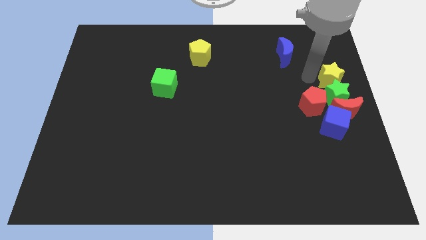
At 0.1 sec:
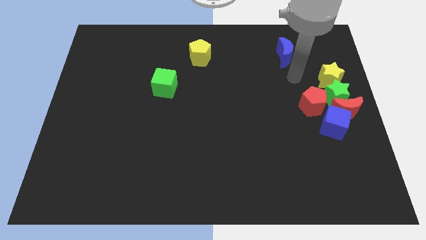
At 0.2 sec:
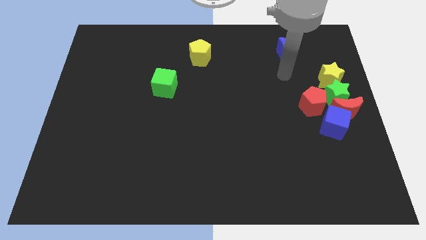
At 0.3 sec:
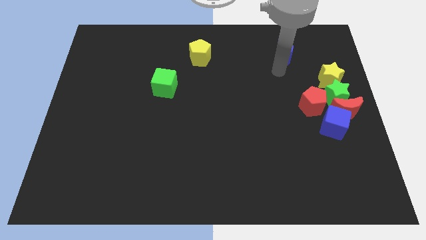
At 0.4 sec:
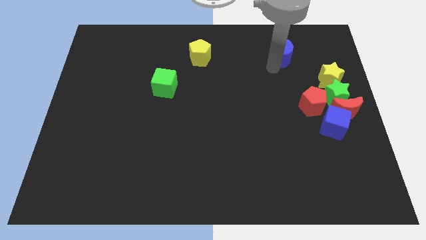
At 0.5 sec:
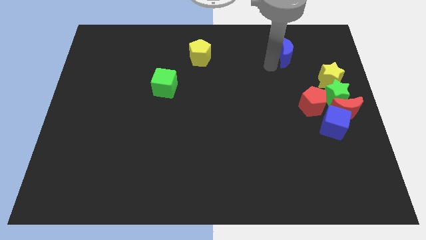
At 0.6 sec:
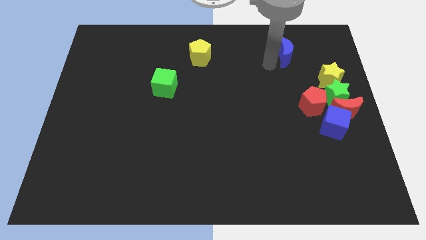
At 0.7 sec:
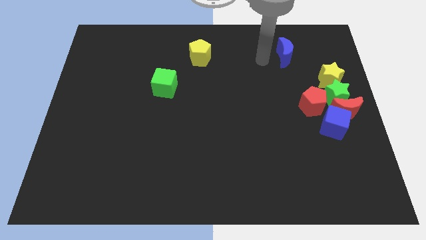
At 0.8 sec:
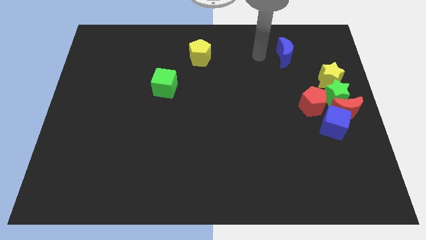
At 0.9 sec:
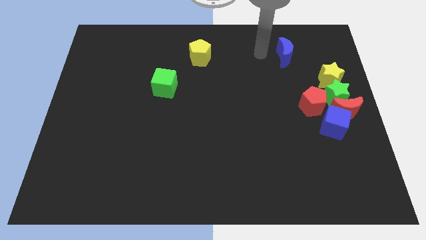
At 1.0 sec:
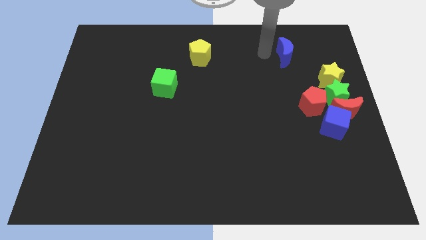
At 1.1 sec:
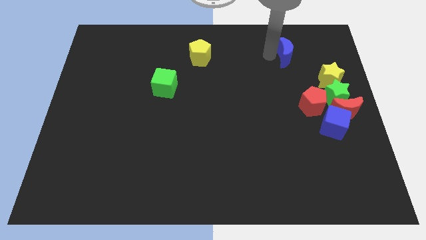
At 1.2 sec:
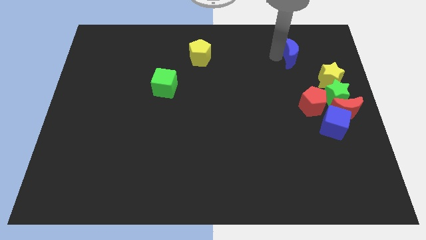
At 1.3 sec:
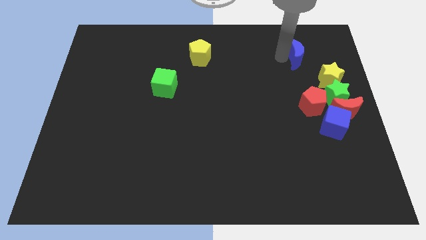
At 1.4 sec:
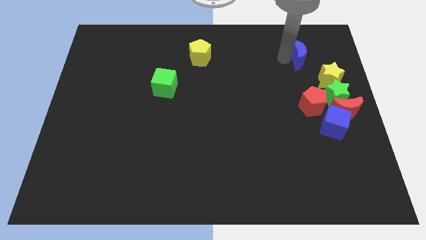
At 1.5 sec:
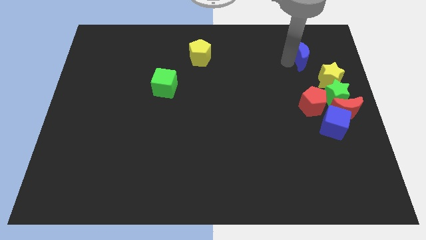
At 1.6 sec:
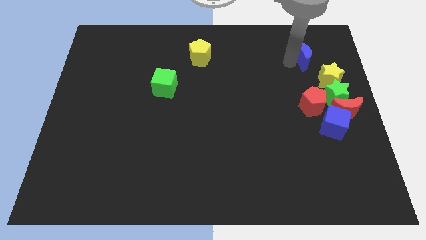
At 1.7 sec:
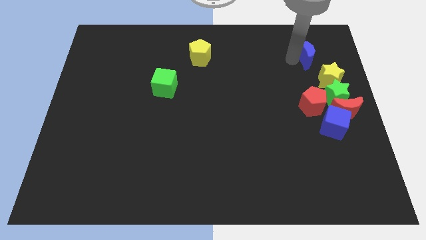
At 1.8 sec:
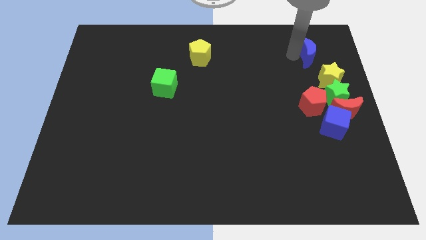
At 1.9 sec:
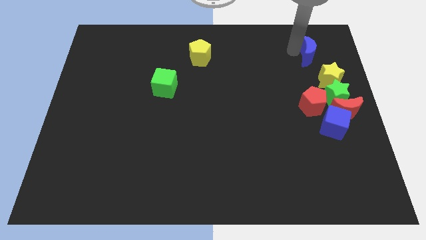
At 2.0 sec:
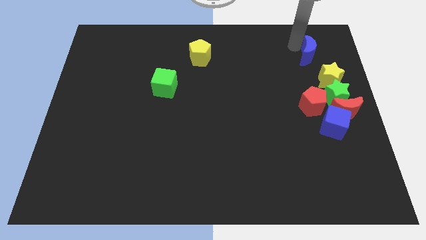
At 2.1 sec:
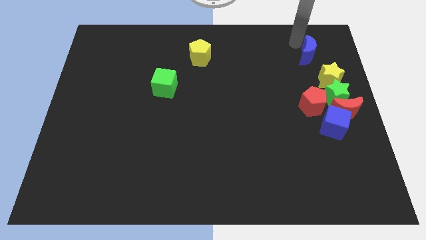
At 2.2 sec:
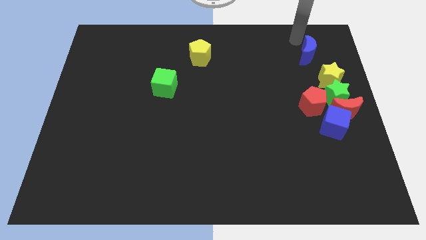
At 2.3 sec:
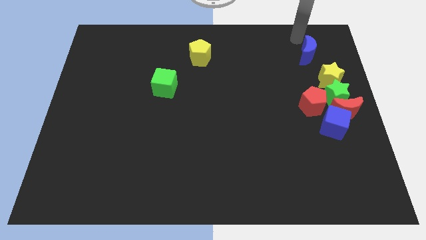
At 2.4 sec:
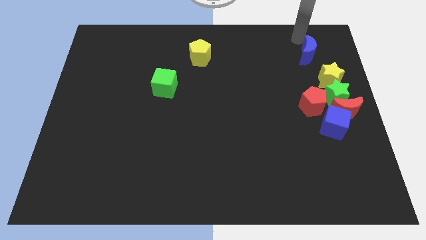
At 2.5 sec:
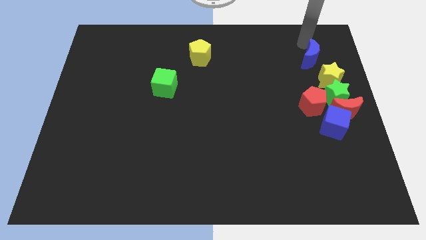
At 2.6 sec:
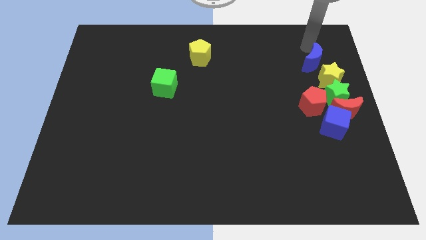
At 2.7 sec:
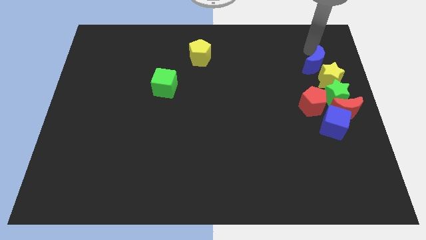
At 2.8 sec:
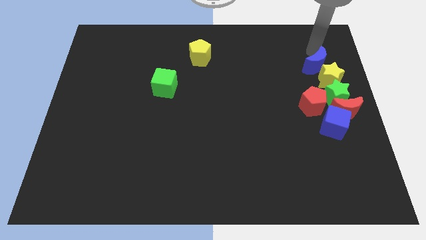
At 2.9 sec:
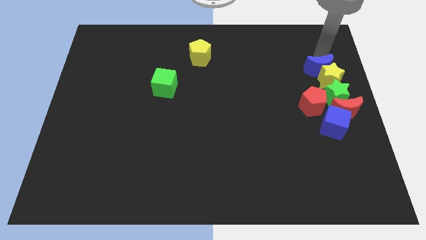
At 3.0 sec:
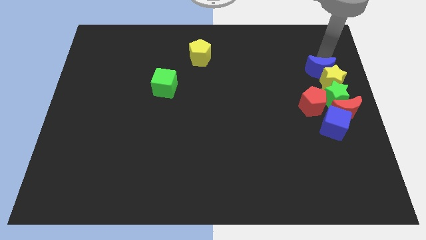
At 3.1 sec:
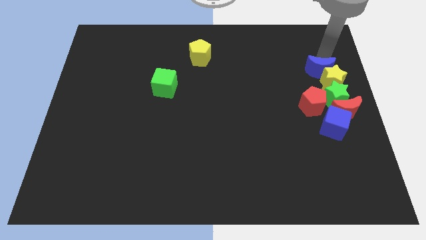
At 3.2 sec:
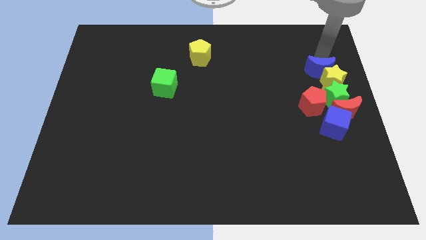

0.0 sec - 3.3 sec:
move the blue crescent into the yellow star

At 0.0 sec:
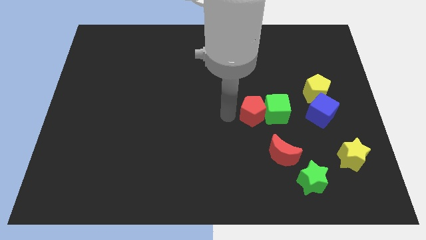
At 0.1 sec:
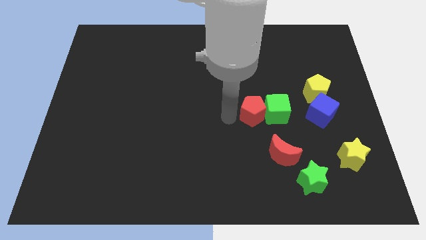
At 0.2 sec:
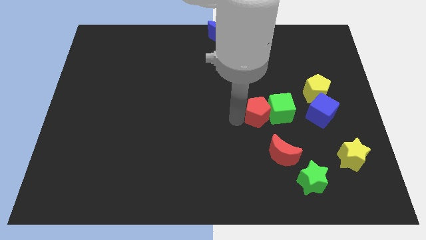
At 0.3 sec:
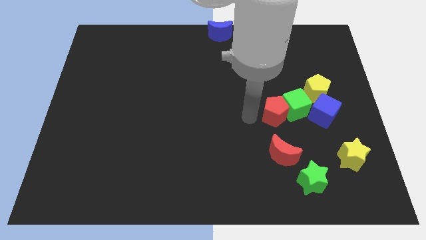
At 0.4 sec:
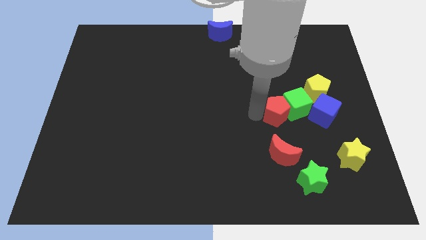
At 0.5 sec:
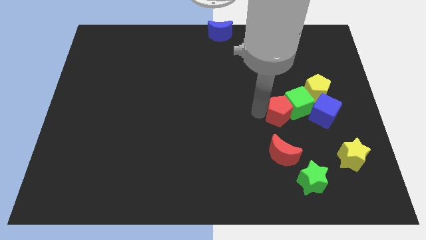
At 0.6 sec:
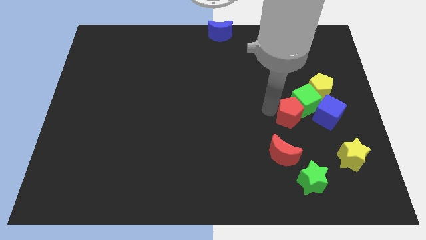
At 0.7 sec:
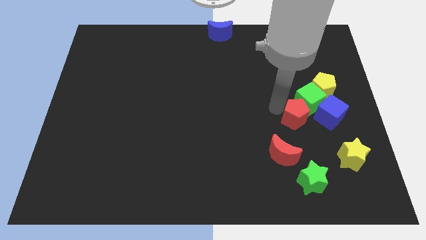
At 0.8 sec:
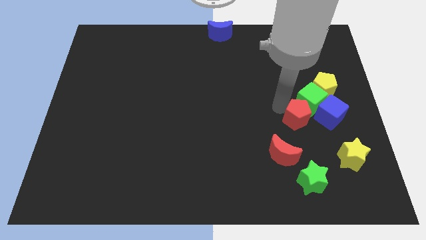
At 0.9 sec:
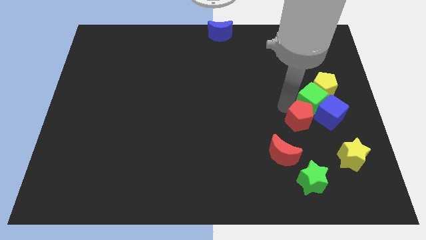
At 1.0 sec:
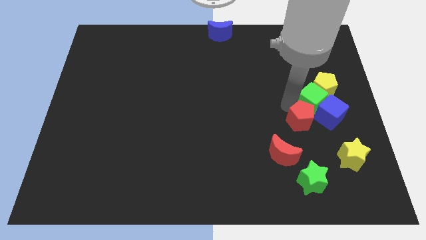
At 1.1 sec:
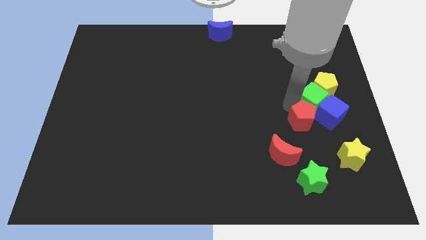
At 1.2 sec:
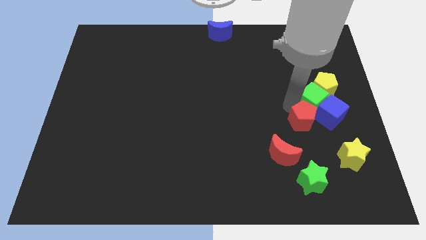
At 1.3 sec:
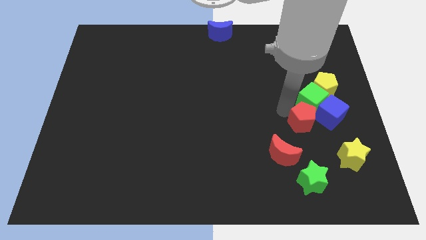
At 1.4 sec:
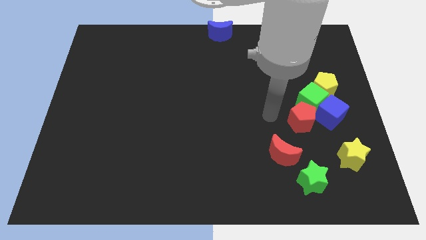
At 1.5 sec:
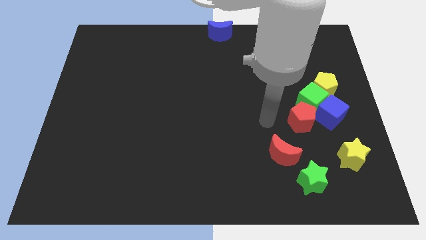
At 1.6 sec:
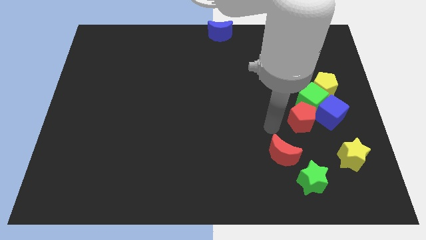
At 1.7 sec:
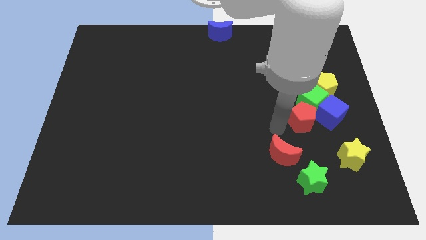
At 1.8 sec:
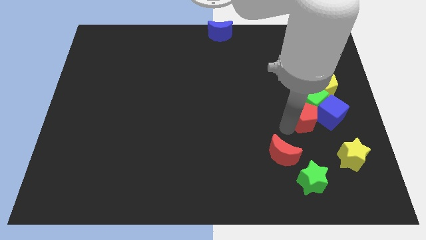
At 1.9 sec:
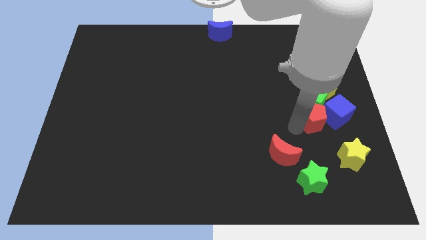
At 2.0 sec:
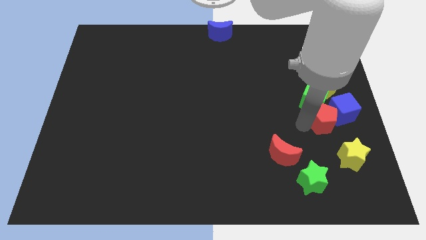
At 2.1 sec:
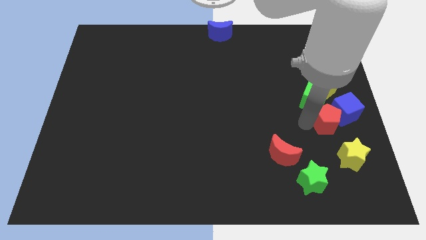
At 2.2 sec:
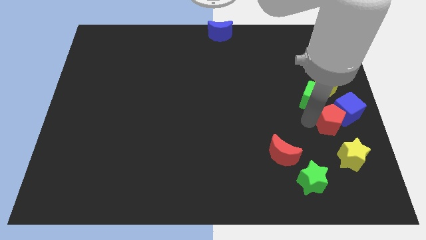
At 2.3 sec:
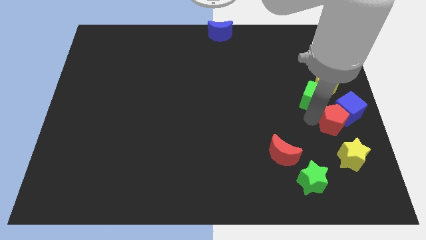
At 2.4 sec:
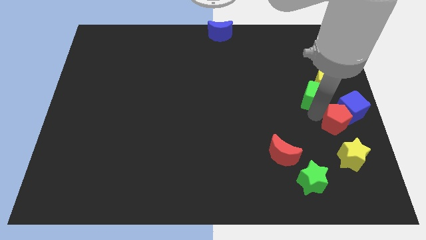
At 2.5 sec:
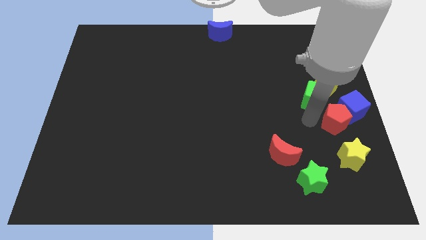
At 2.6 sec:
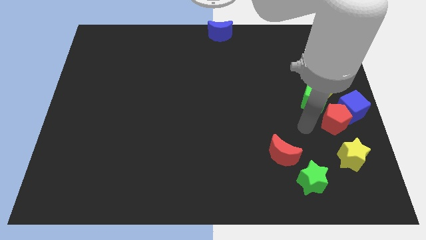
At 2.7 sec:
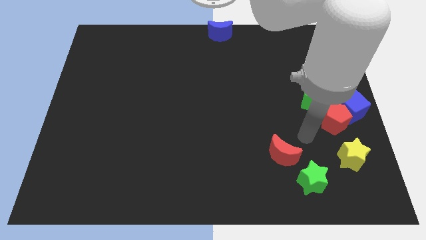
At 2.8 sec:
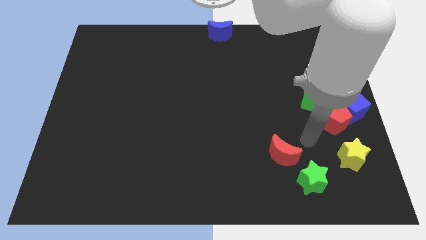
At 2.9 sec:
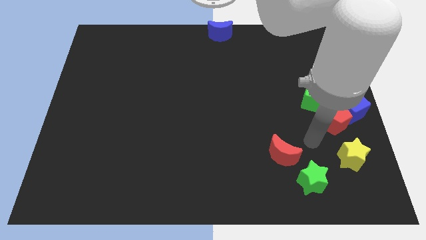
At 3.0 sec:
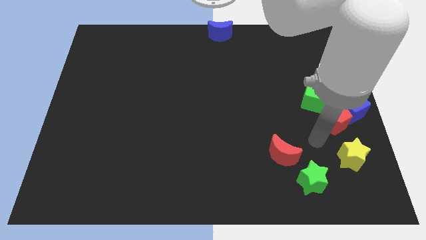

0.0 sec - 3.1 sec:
push group of blocks towards center right

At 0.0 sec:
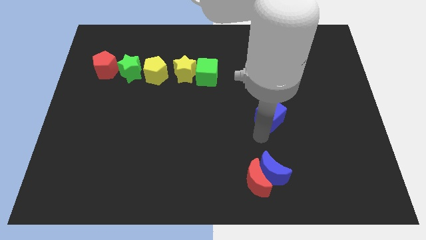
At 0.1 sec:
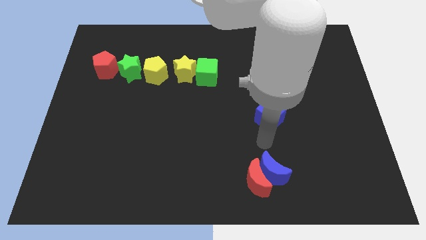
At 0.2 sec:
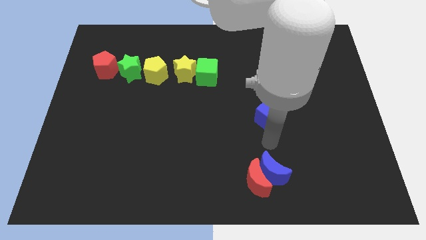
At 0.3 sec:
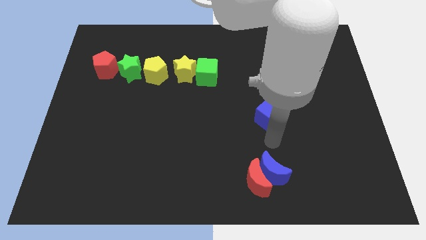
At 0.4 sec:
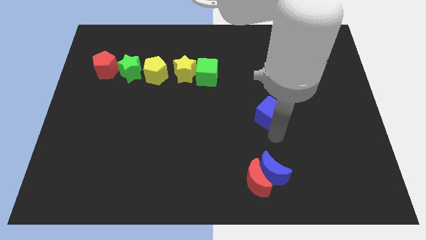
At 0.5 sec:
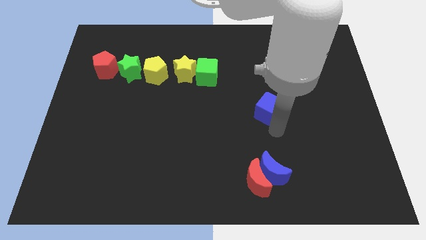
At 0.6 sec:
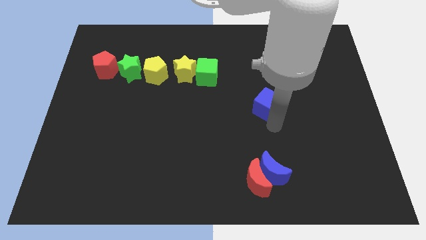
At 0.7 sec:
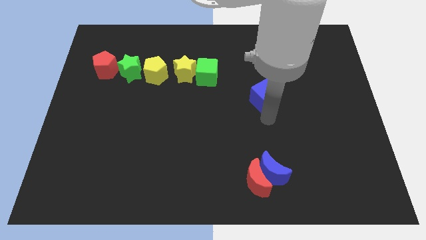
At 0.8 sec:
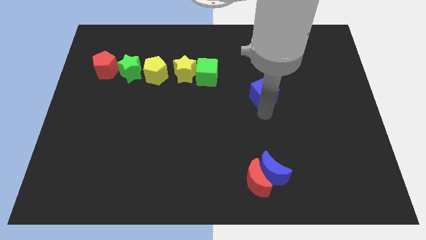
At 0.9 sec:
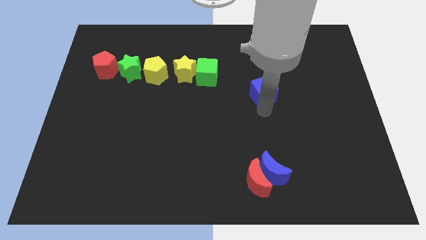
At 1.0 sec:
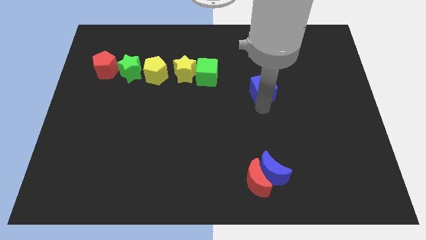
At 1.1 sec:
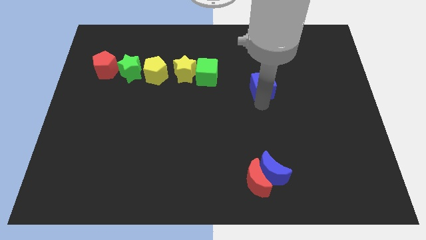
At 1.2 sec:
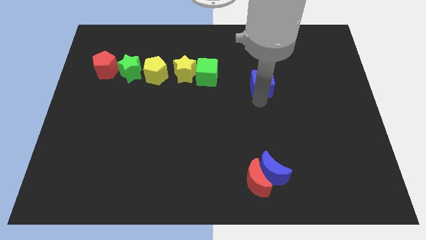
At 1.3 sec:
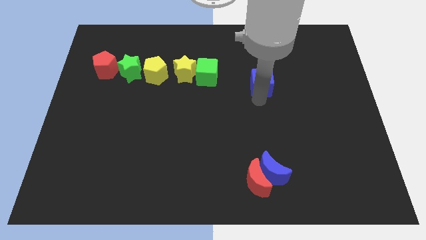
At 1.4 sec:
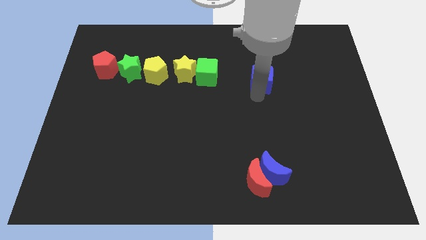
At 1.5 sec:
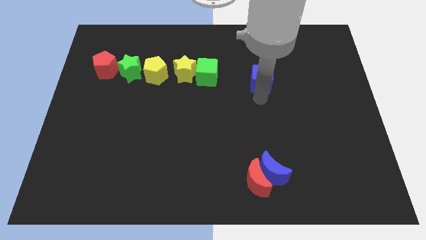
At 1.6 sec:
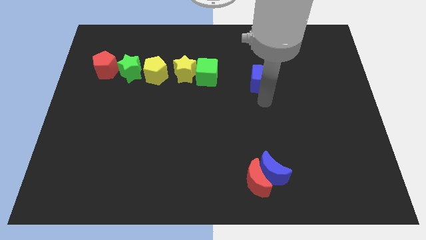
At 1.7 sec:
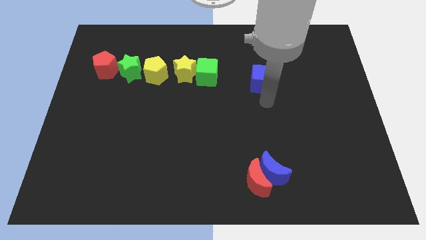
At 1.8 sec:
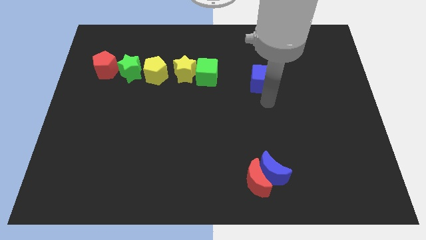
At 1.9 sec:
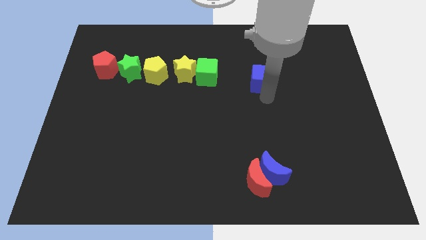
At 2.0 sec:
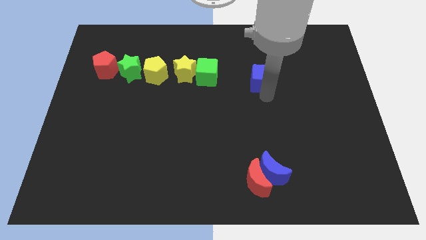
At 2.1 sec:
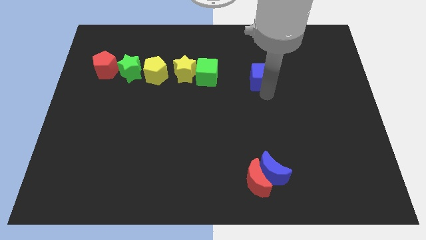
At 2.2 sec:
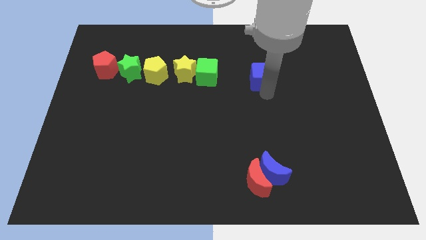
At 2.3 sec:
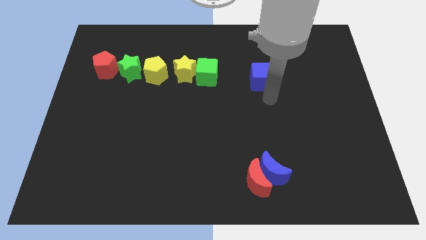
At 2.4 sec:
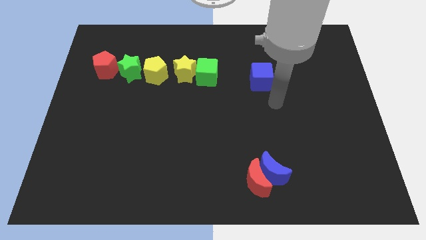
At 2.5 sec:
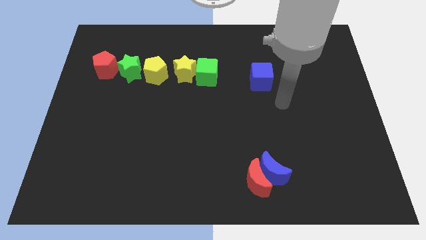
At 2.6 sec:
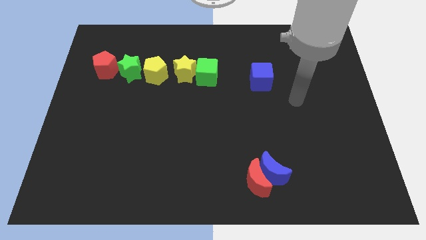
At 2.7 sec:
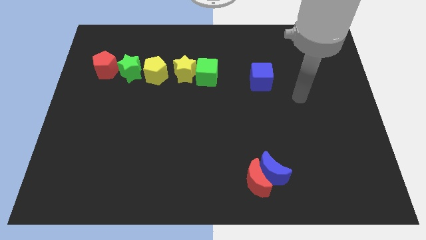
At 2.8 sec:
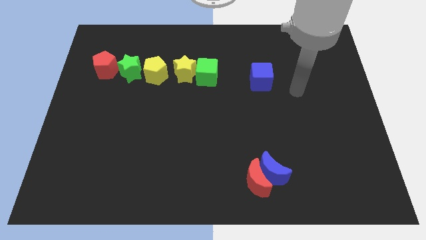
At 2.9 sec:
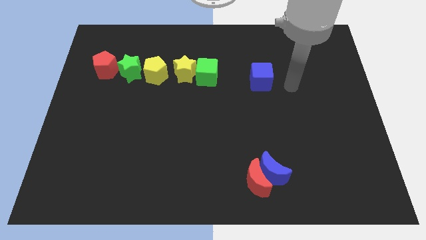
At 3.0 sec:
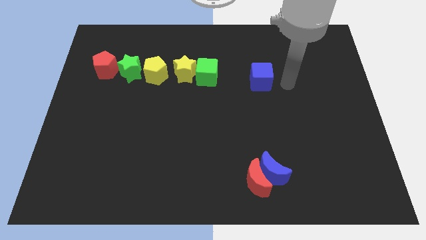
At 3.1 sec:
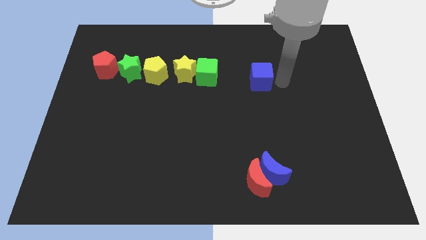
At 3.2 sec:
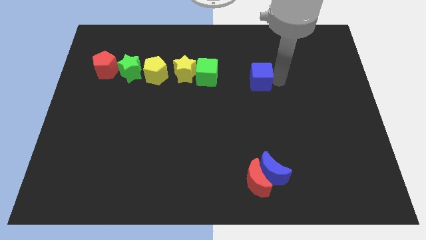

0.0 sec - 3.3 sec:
push blue crescent towards up
